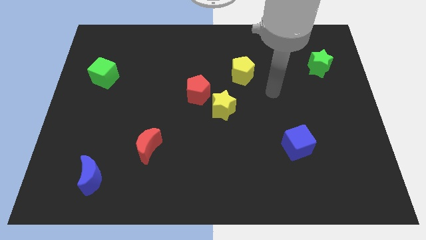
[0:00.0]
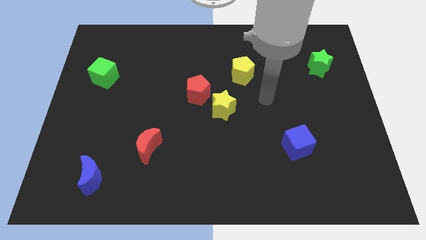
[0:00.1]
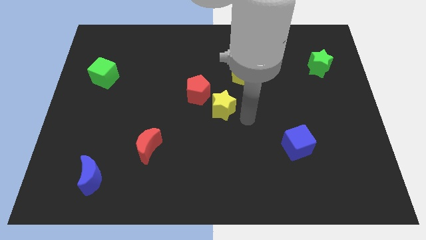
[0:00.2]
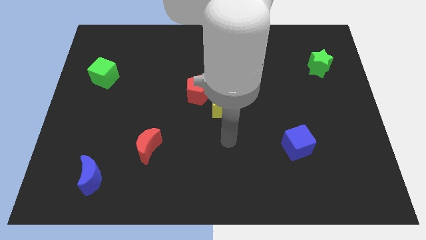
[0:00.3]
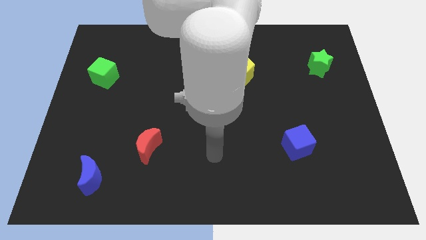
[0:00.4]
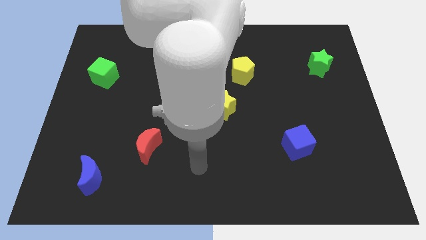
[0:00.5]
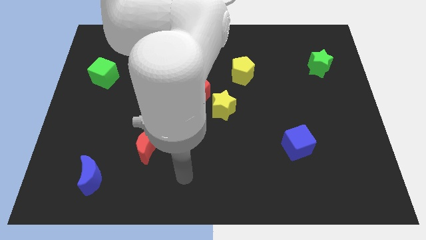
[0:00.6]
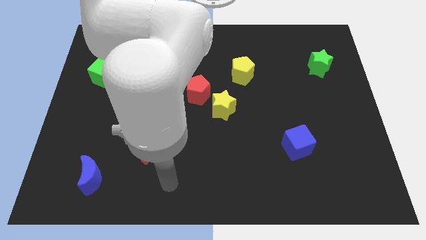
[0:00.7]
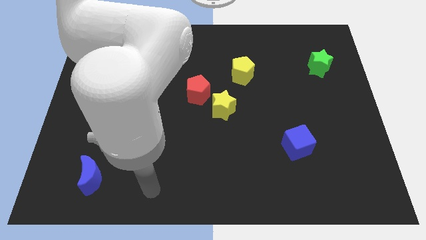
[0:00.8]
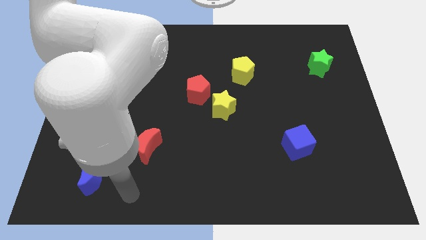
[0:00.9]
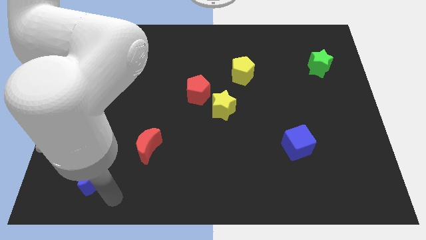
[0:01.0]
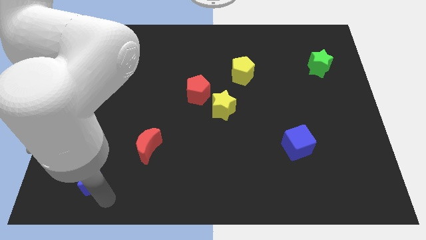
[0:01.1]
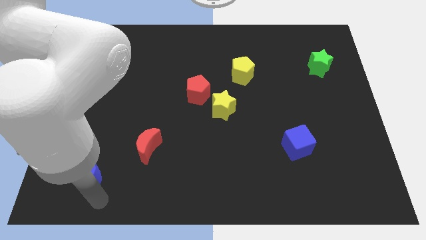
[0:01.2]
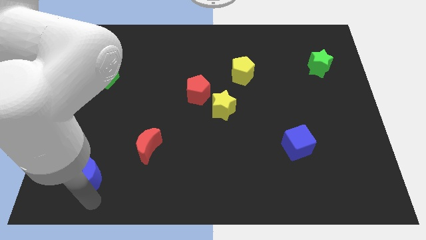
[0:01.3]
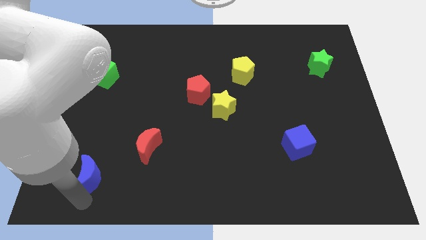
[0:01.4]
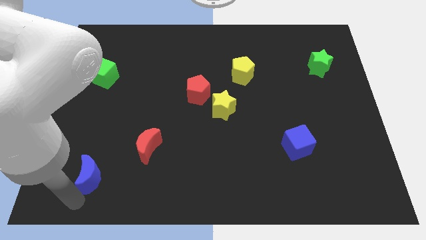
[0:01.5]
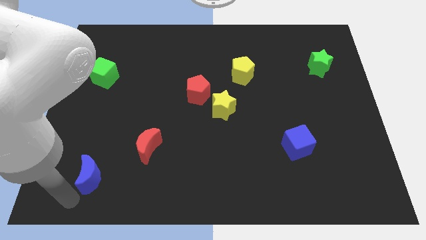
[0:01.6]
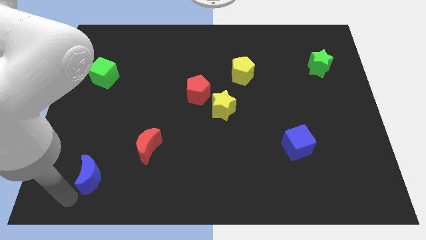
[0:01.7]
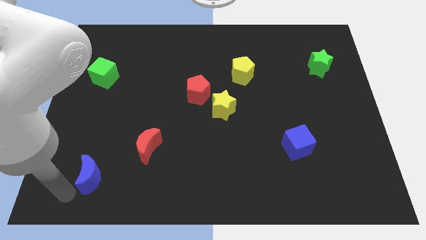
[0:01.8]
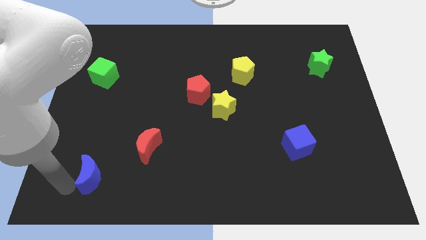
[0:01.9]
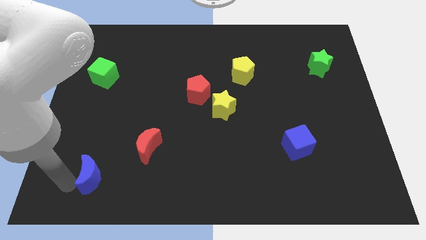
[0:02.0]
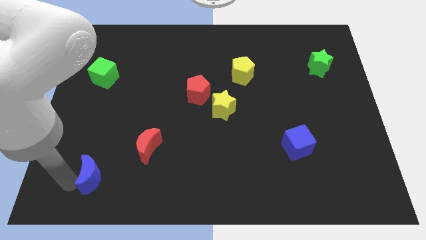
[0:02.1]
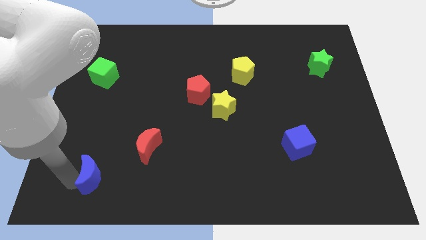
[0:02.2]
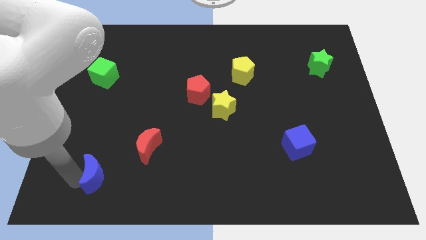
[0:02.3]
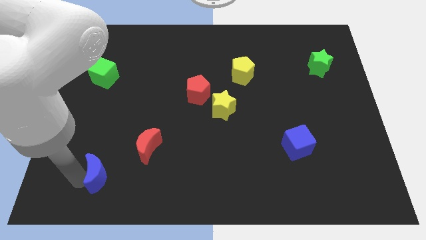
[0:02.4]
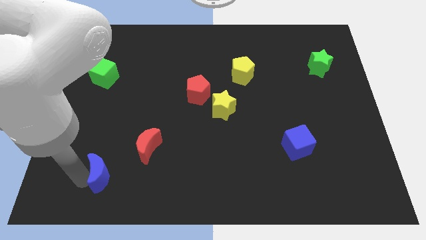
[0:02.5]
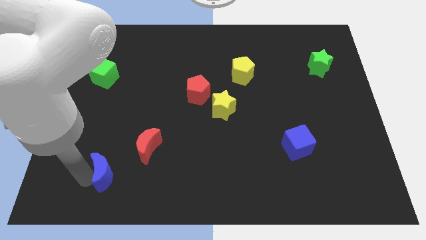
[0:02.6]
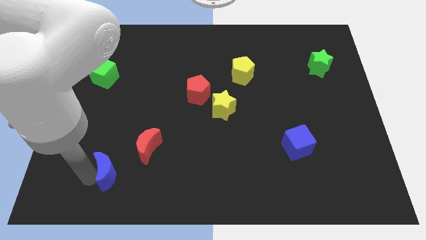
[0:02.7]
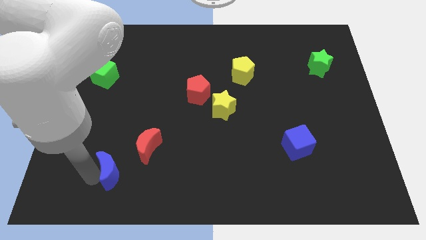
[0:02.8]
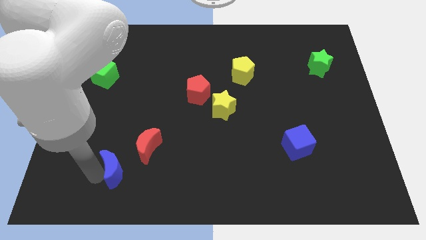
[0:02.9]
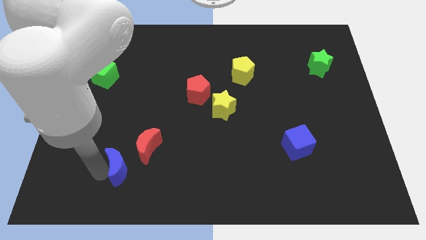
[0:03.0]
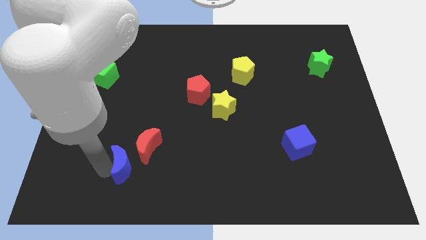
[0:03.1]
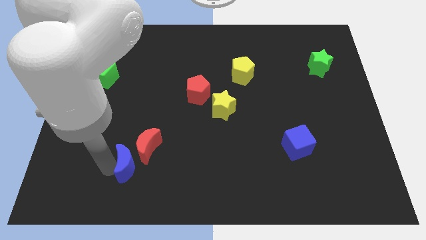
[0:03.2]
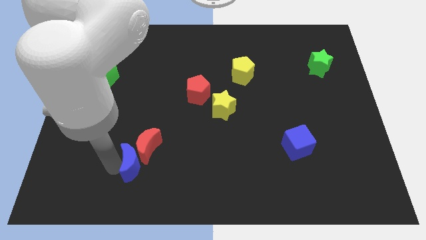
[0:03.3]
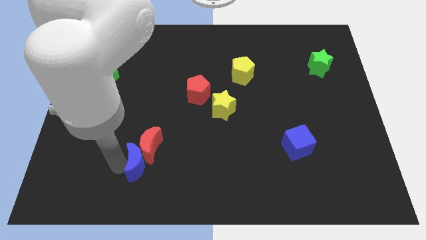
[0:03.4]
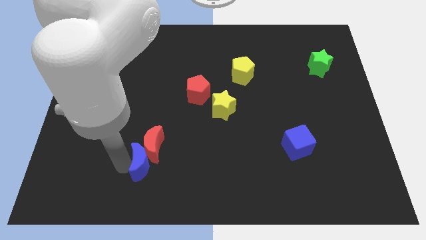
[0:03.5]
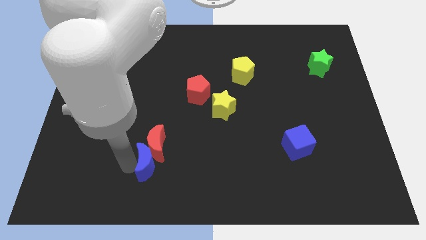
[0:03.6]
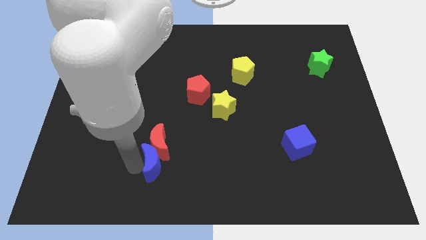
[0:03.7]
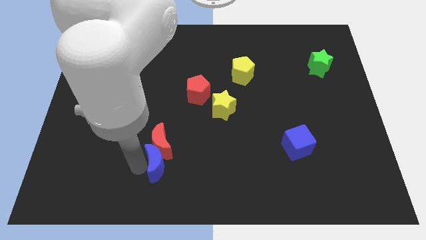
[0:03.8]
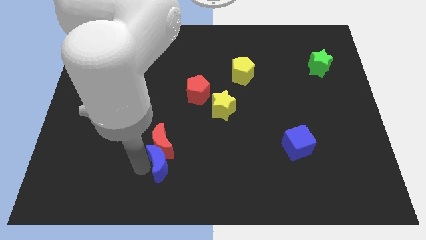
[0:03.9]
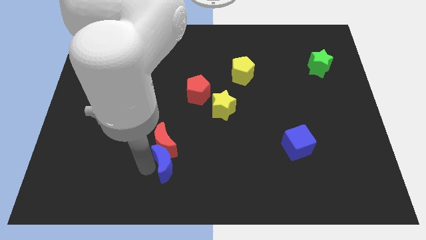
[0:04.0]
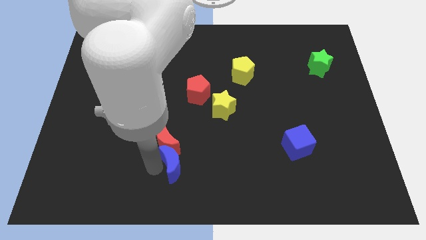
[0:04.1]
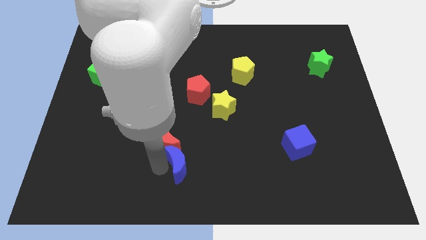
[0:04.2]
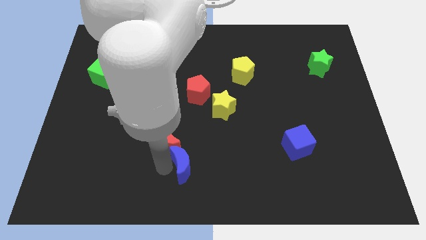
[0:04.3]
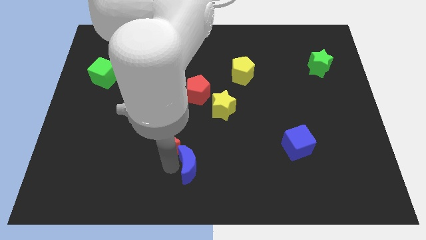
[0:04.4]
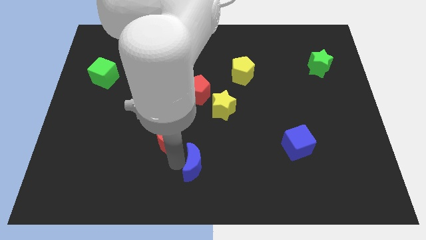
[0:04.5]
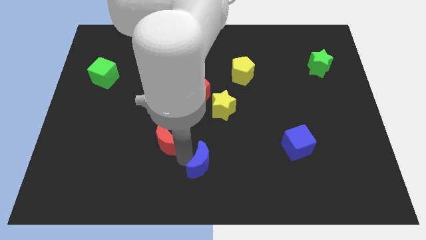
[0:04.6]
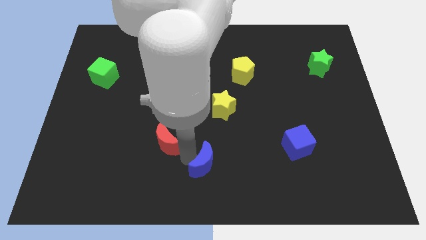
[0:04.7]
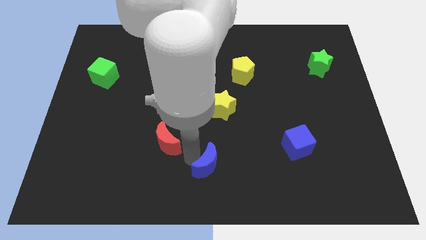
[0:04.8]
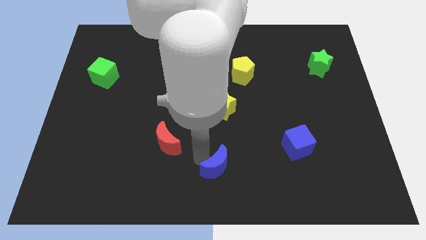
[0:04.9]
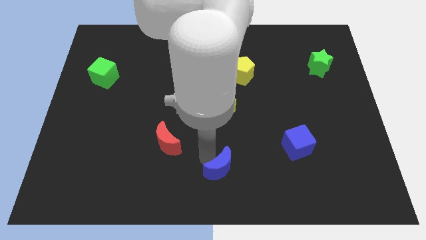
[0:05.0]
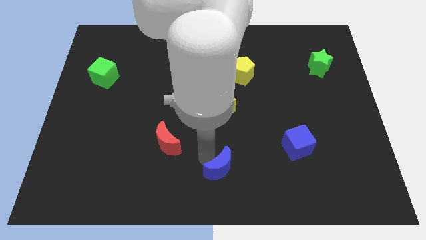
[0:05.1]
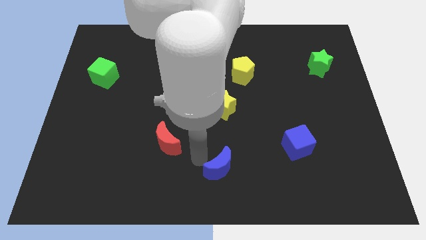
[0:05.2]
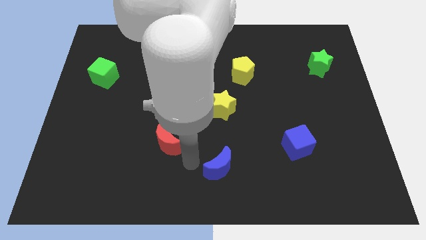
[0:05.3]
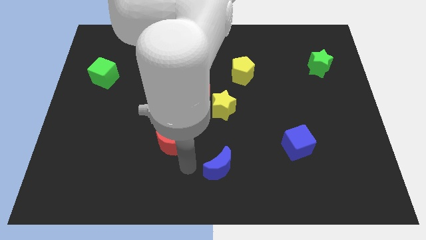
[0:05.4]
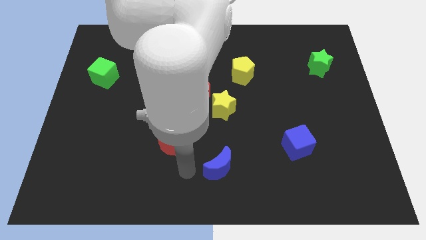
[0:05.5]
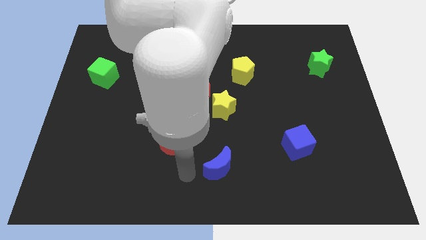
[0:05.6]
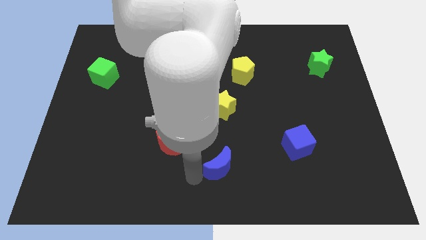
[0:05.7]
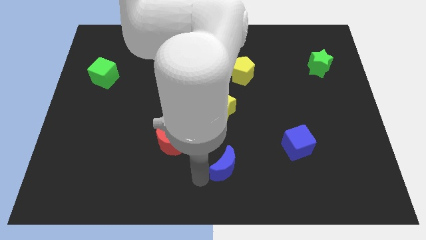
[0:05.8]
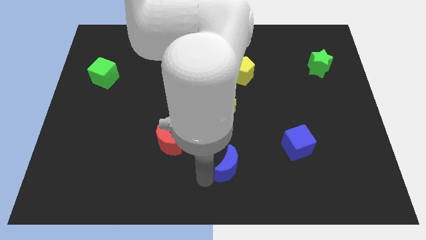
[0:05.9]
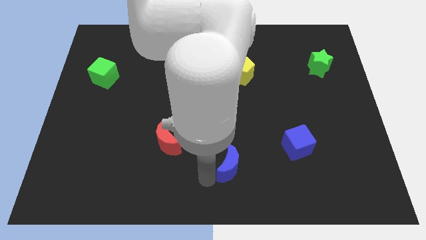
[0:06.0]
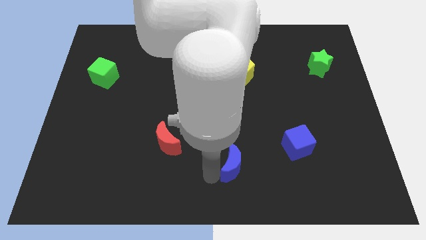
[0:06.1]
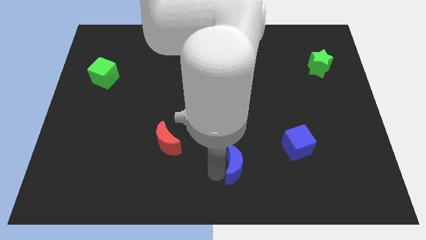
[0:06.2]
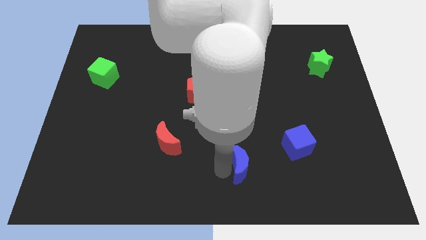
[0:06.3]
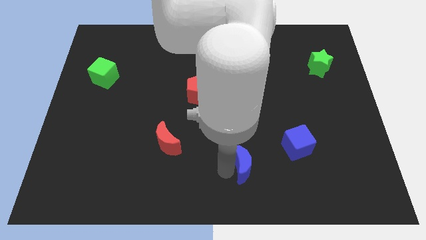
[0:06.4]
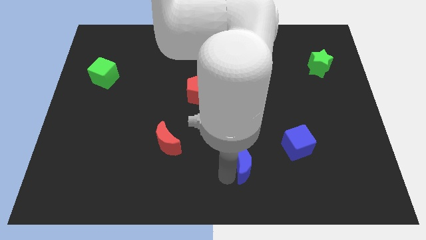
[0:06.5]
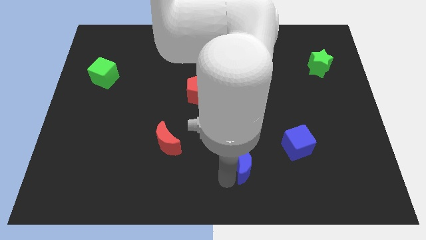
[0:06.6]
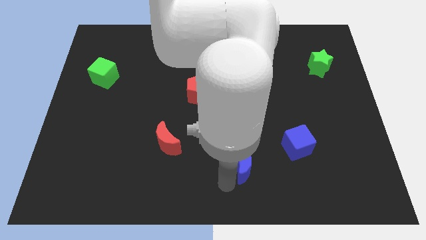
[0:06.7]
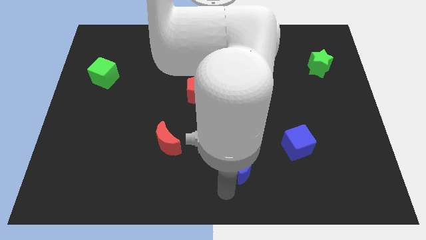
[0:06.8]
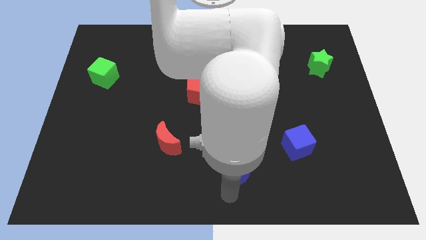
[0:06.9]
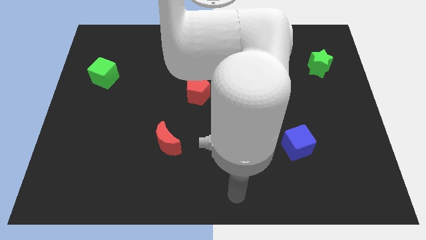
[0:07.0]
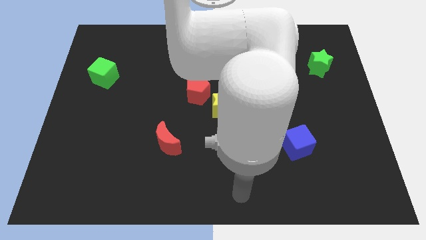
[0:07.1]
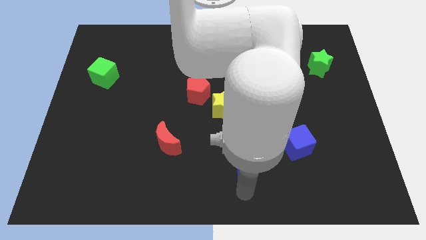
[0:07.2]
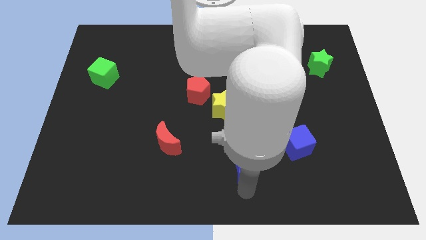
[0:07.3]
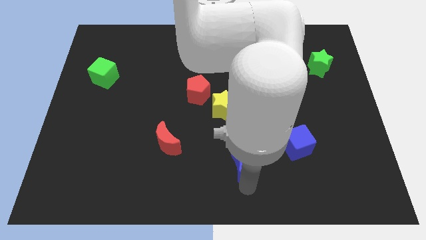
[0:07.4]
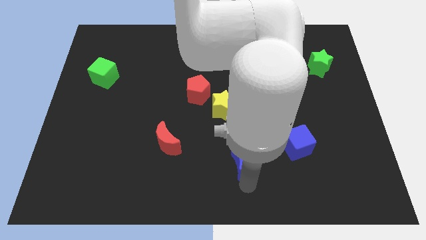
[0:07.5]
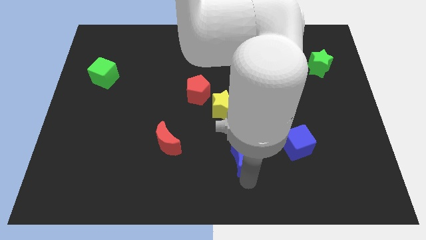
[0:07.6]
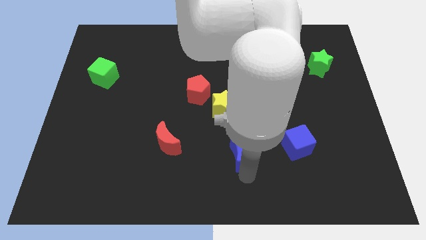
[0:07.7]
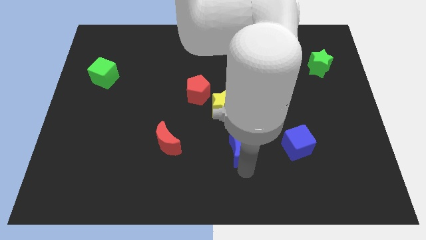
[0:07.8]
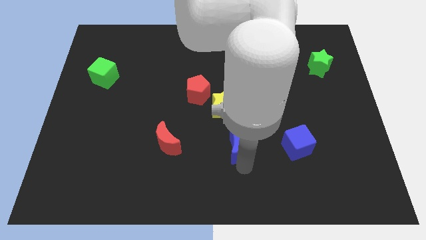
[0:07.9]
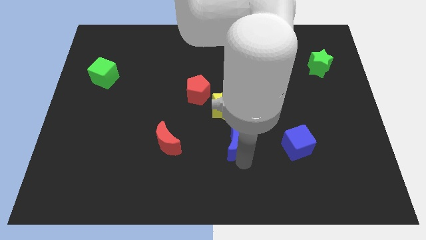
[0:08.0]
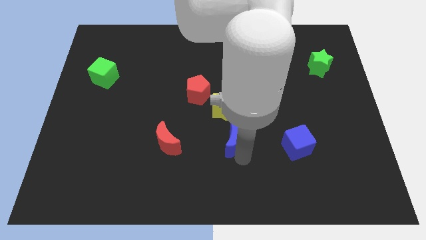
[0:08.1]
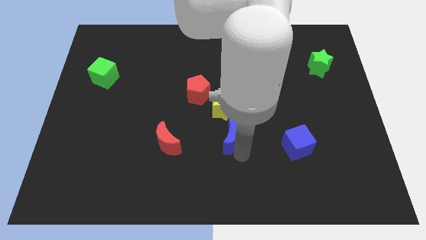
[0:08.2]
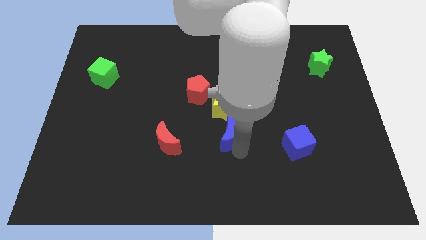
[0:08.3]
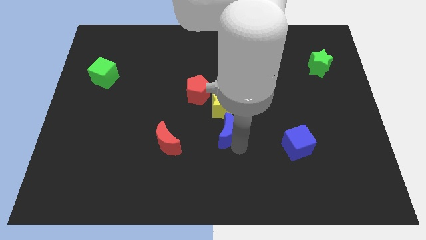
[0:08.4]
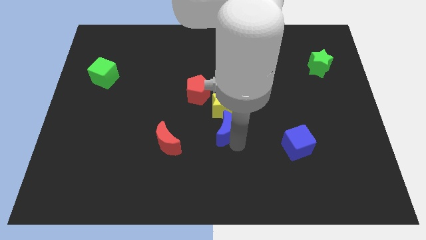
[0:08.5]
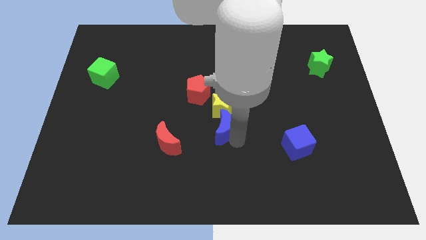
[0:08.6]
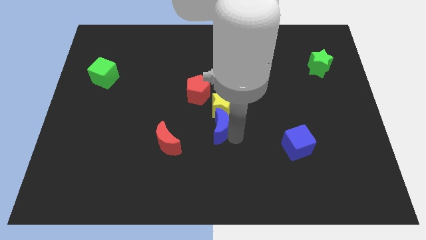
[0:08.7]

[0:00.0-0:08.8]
move the blue moon to the yellow star
